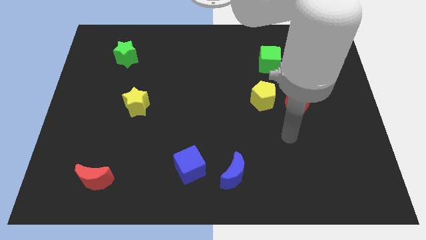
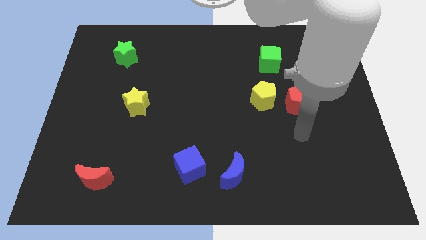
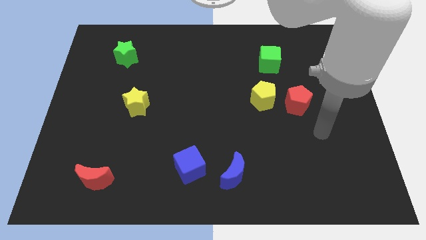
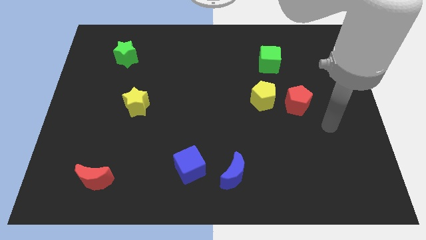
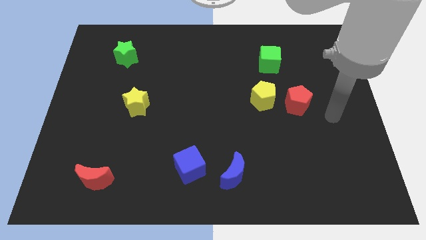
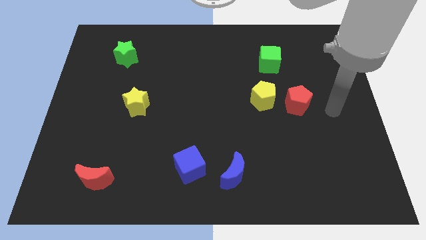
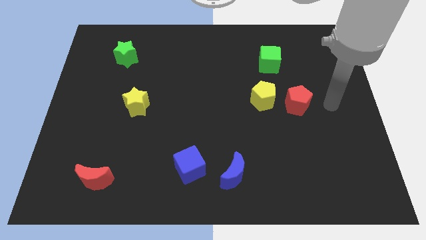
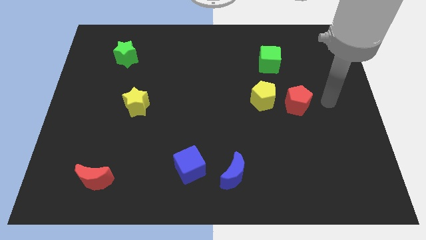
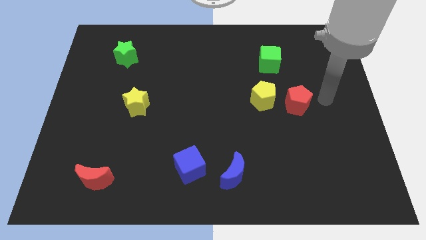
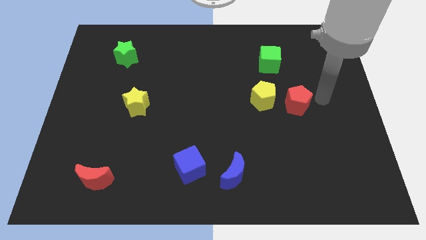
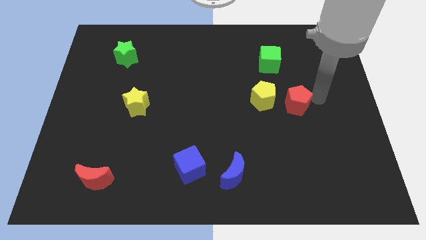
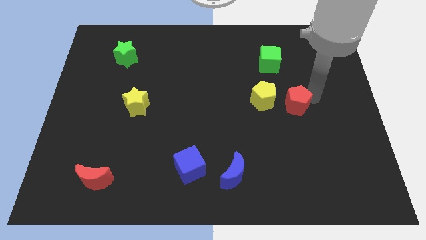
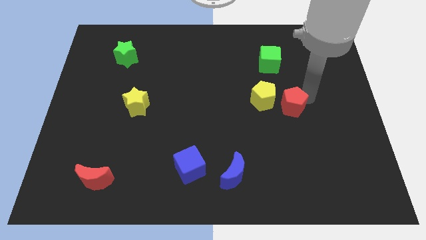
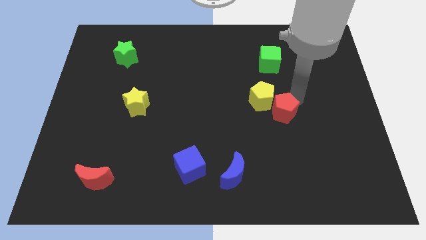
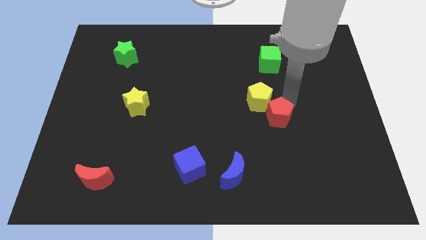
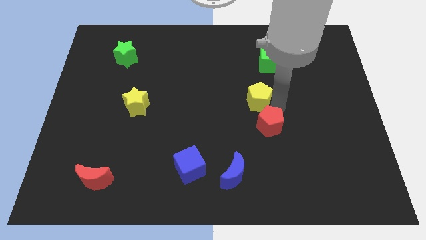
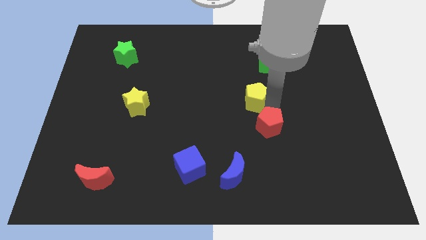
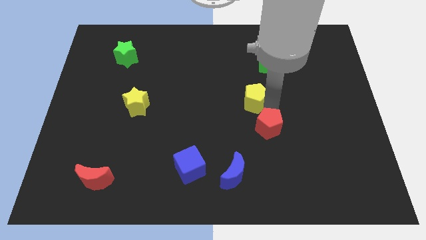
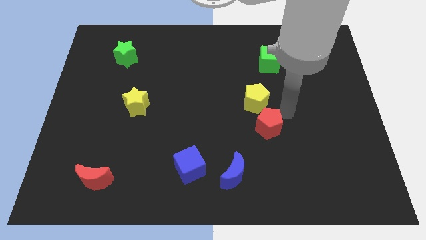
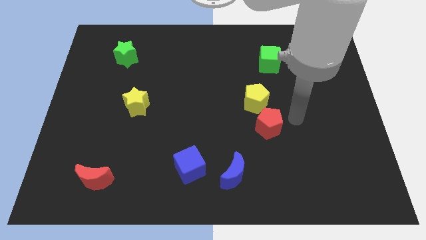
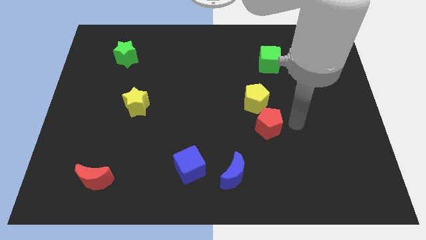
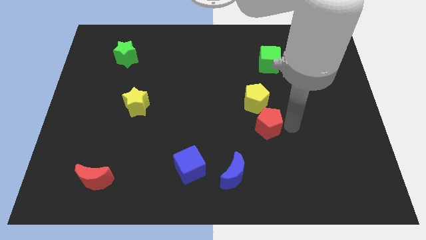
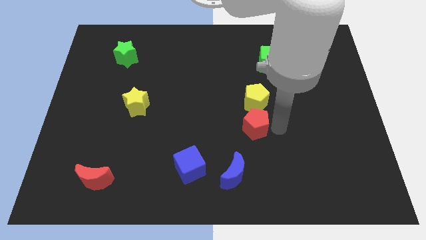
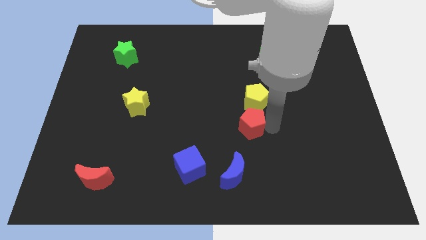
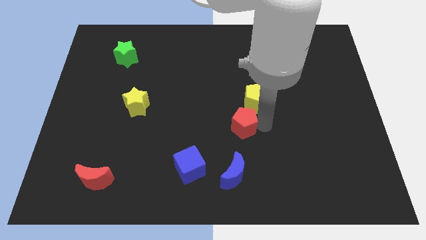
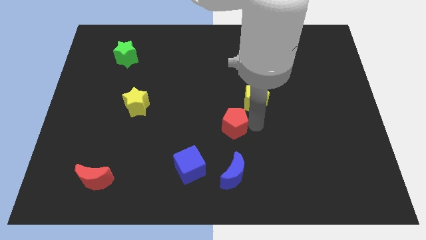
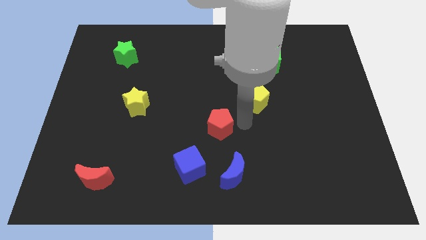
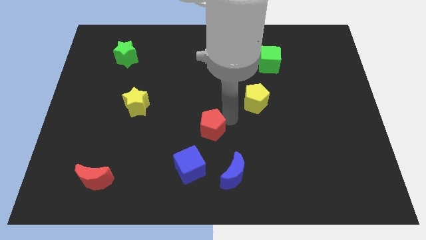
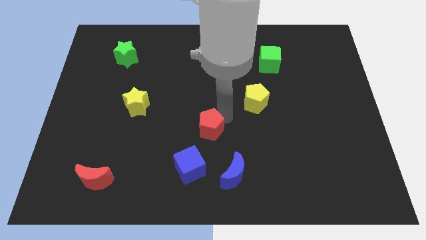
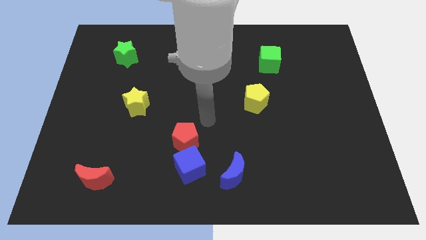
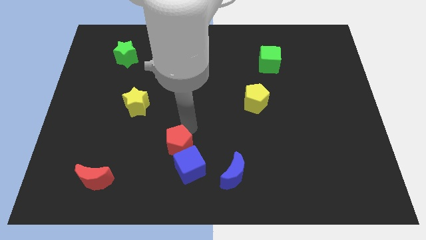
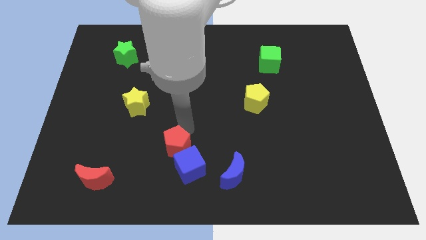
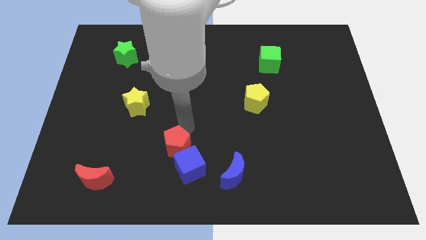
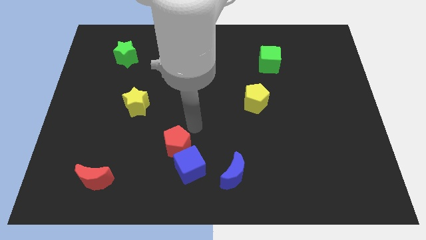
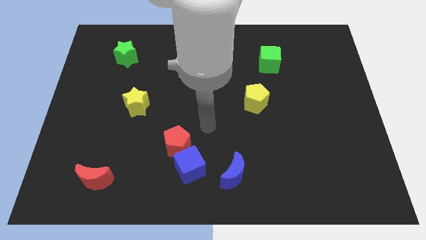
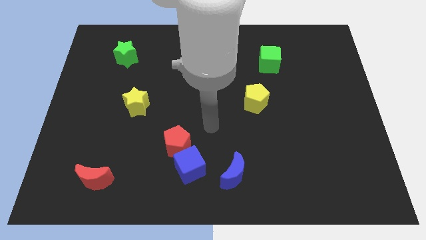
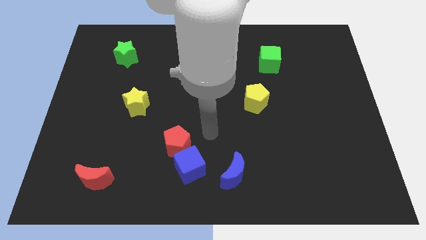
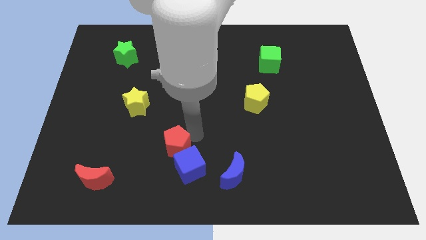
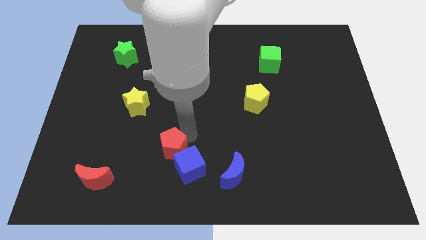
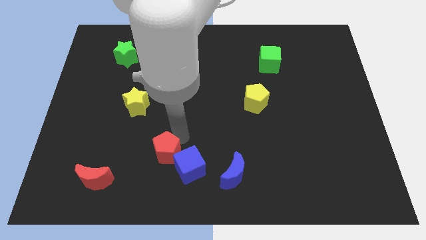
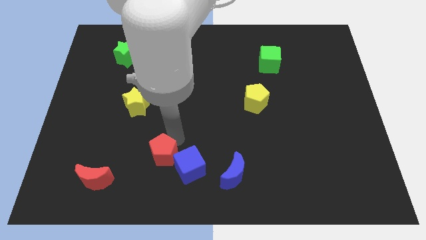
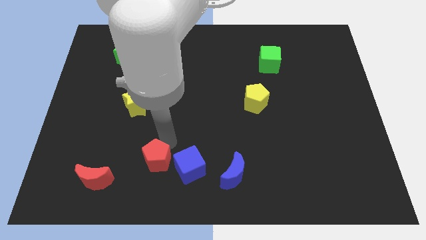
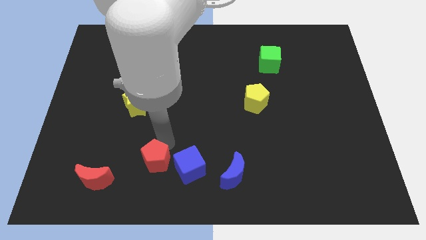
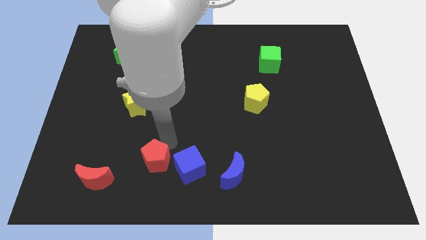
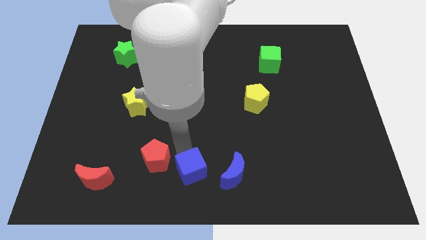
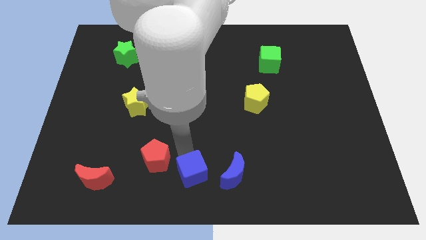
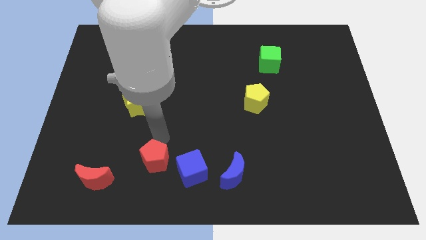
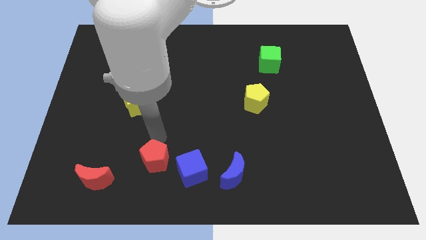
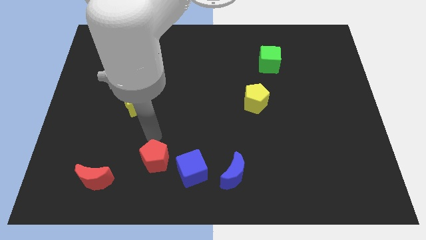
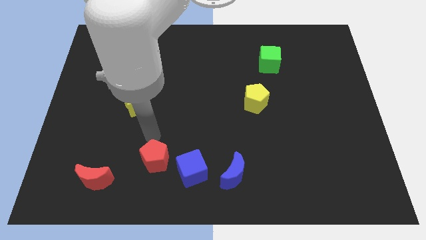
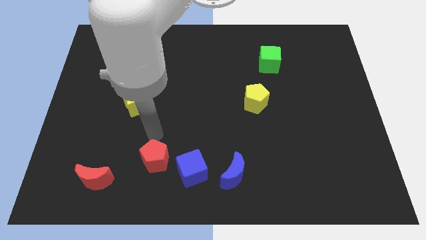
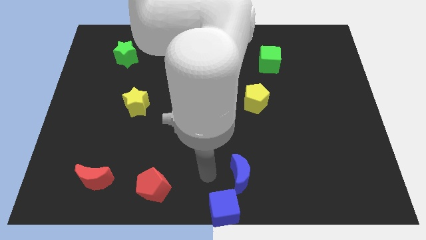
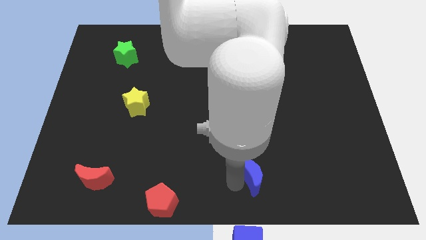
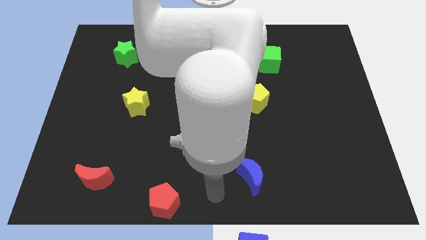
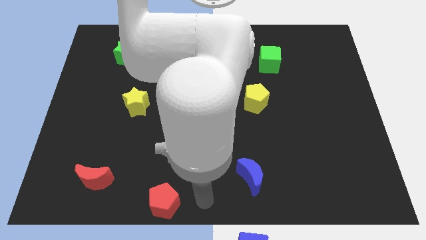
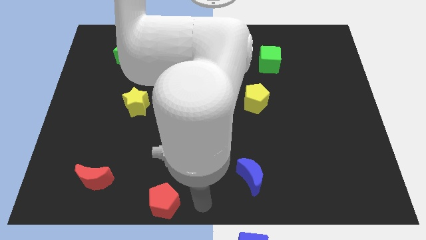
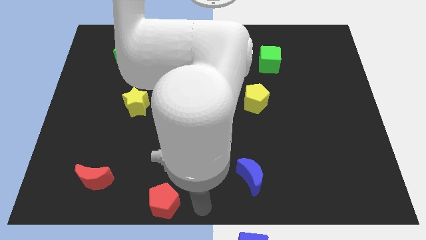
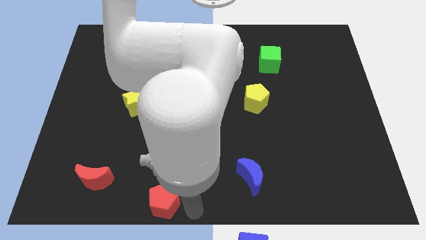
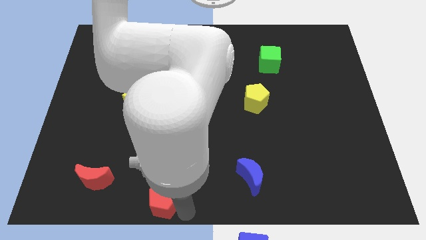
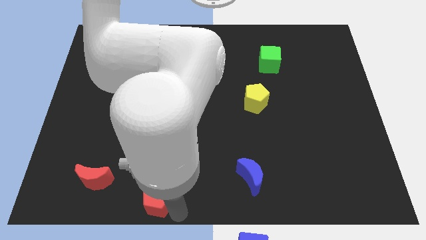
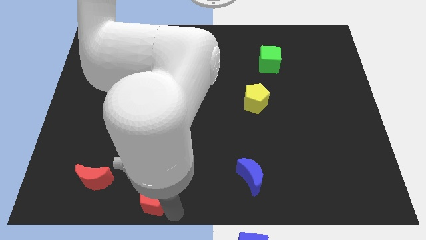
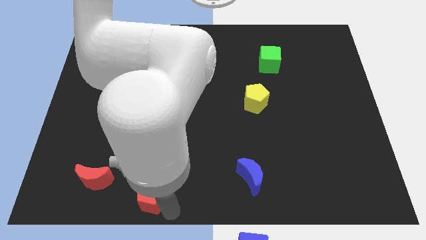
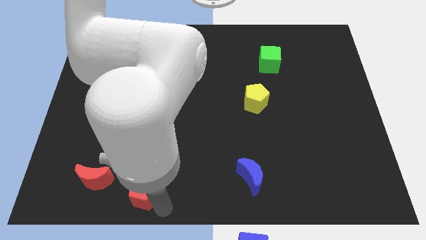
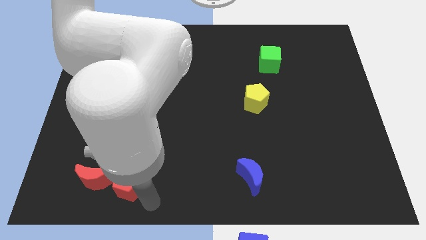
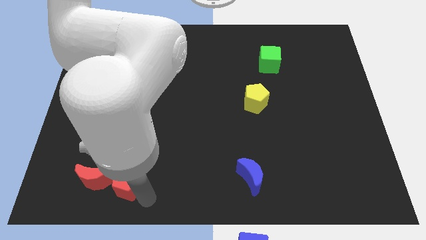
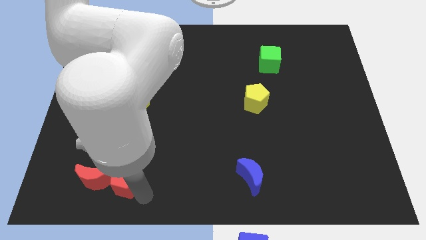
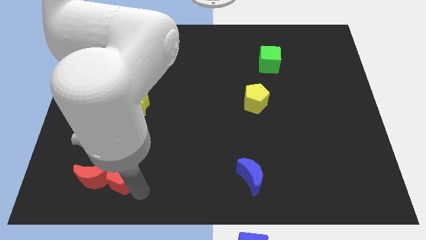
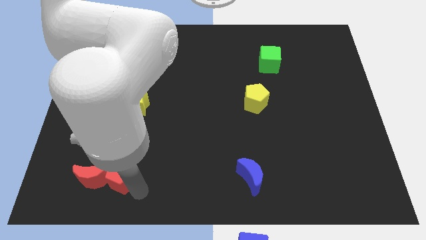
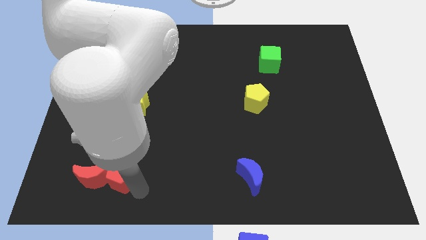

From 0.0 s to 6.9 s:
slide the red pentagon towards the red moon

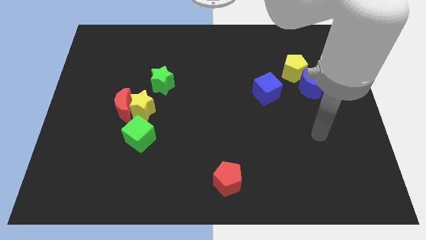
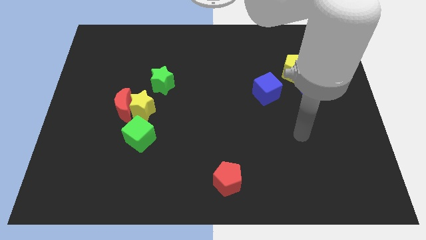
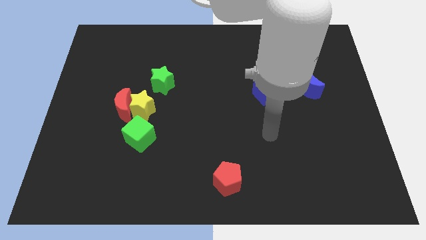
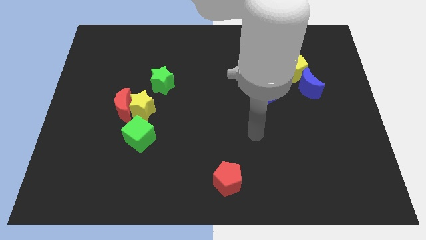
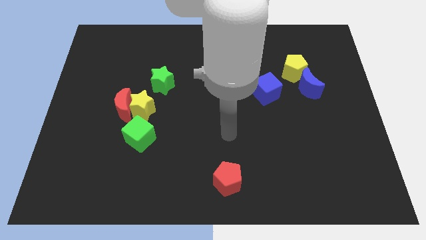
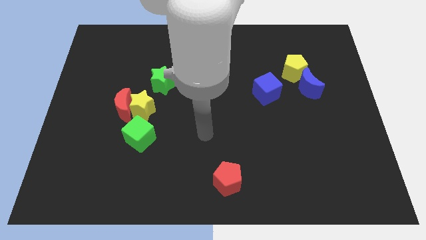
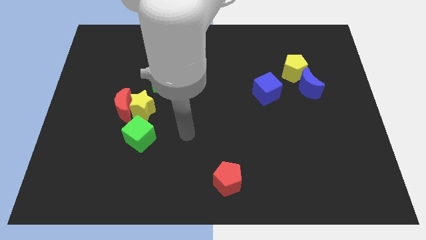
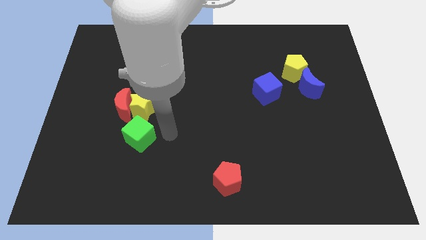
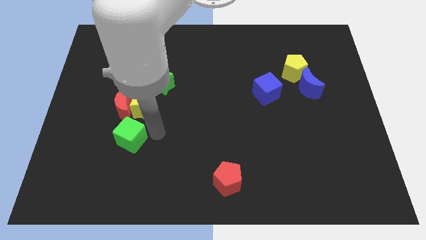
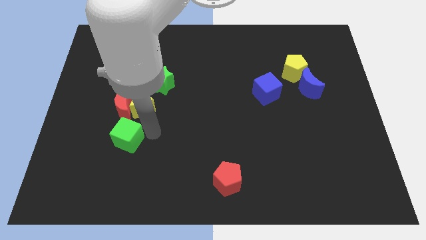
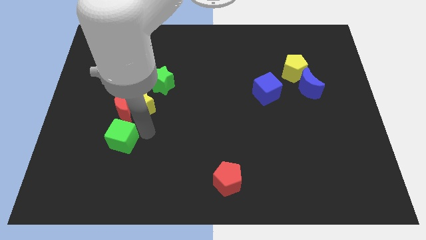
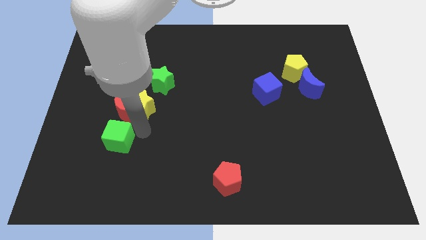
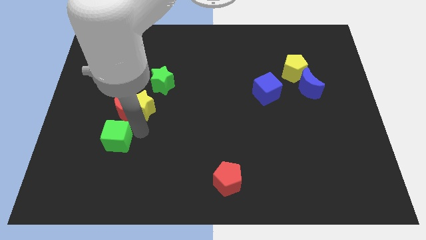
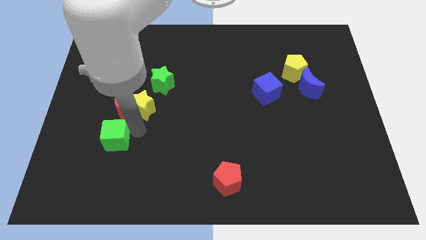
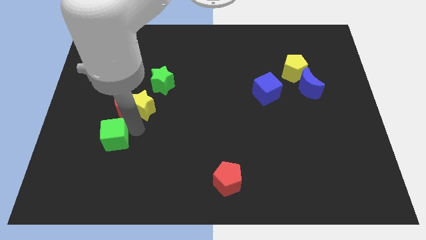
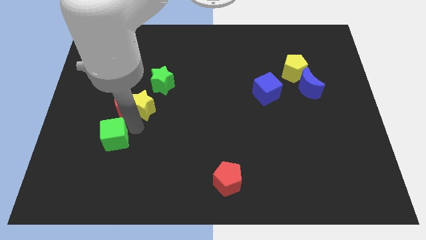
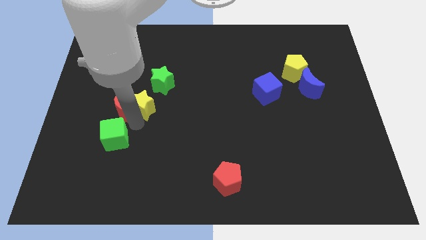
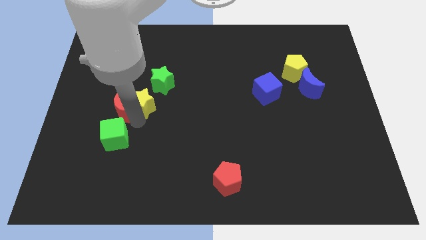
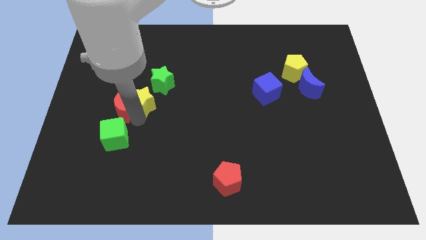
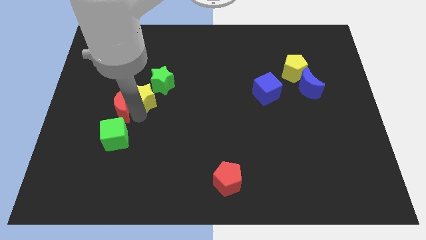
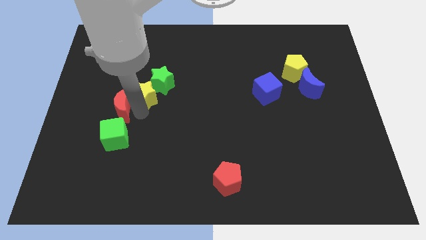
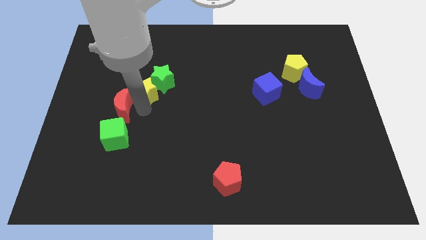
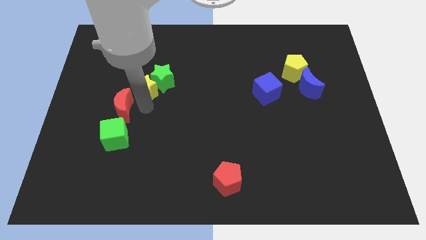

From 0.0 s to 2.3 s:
put the yellow star next to the green star
